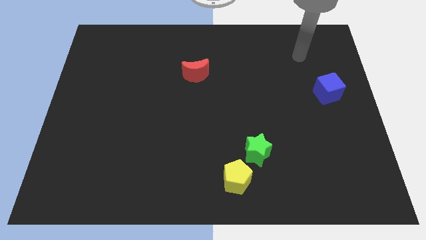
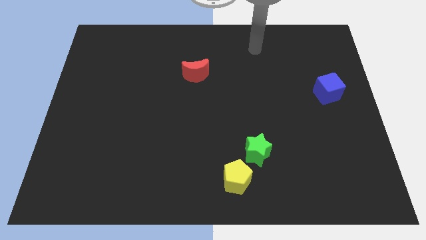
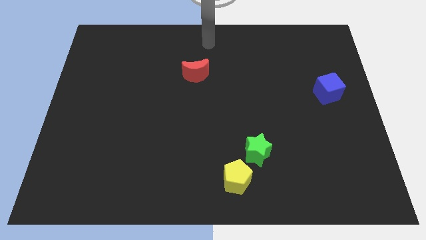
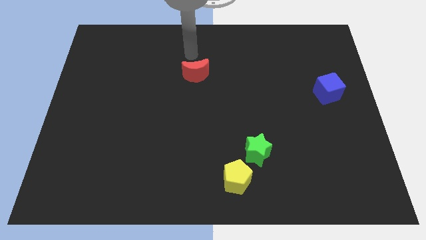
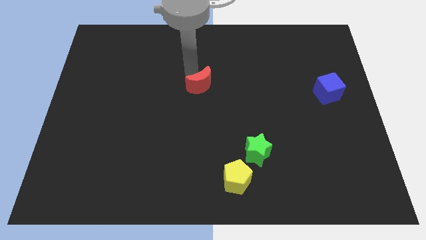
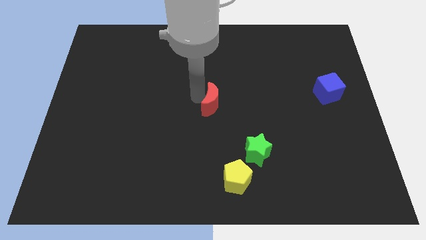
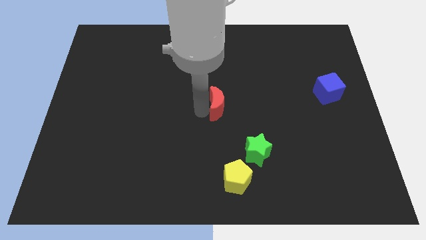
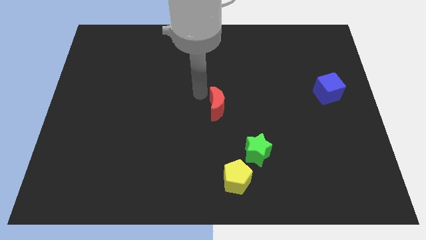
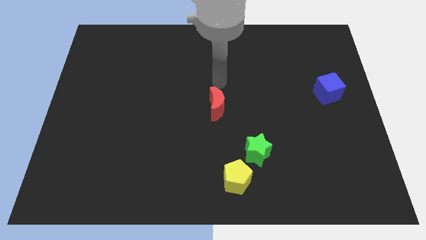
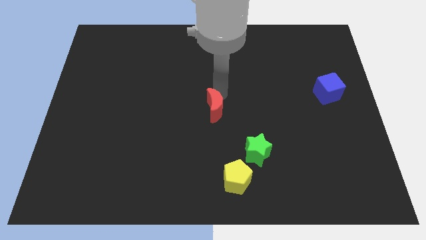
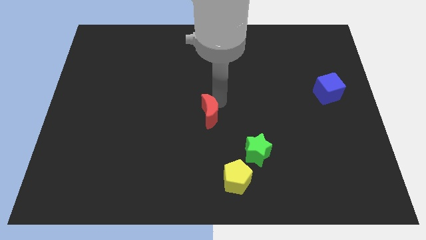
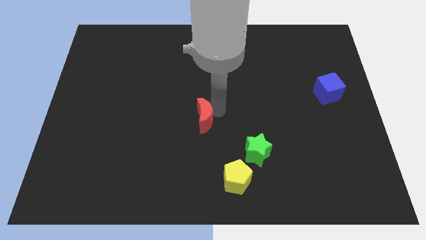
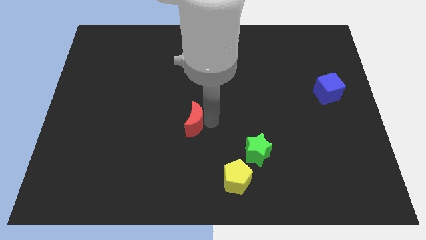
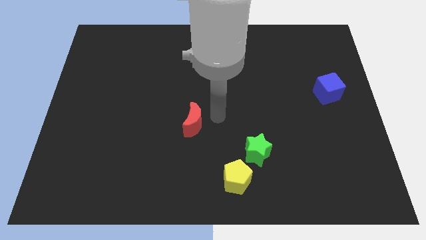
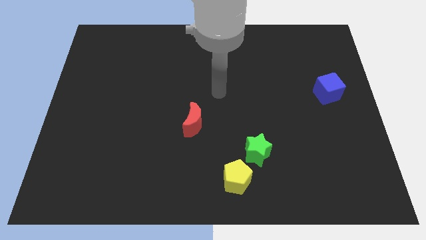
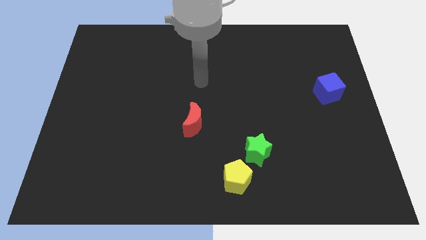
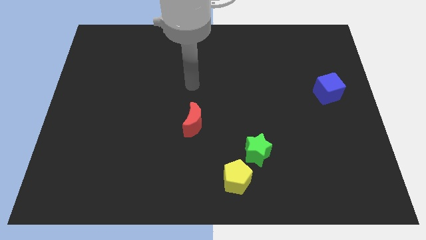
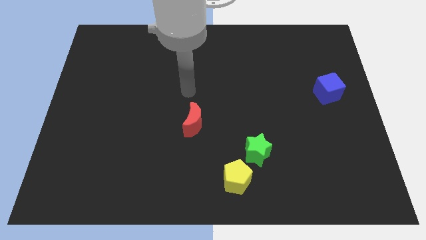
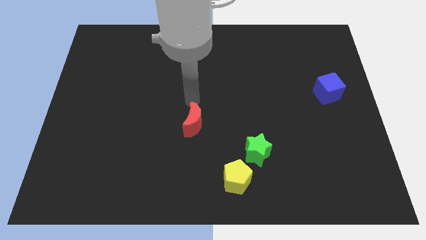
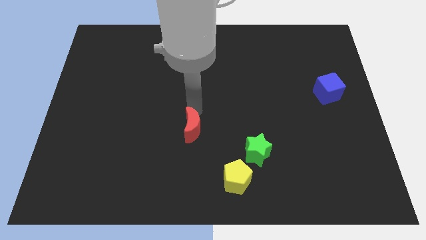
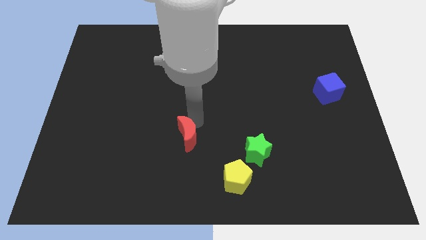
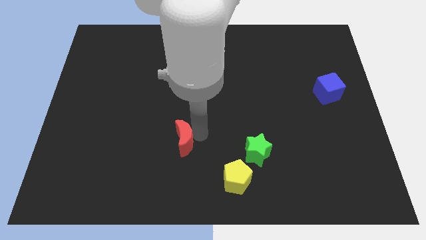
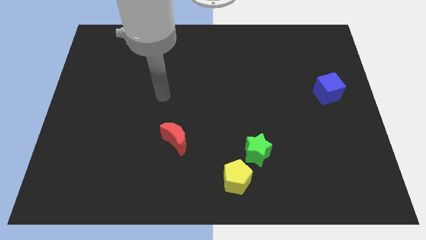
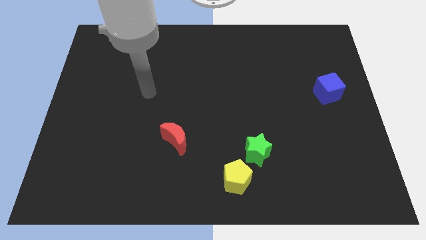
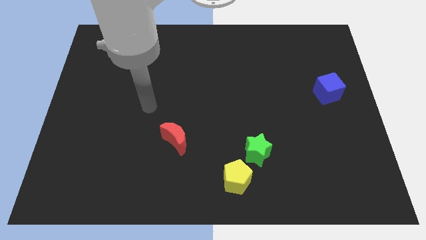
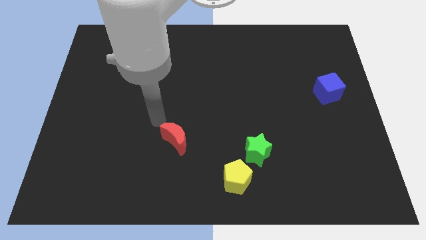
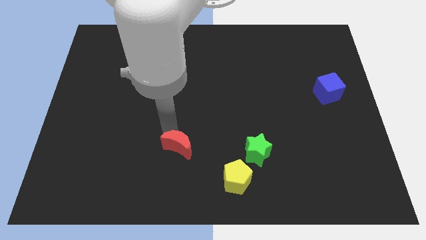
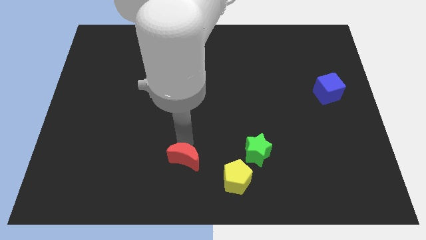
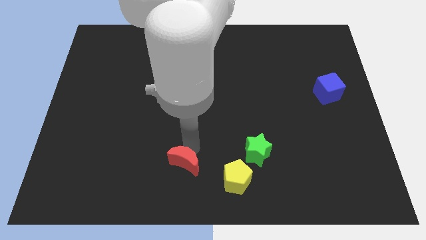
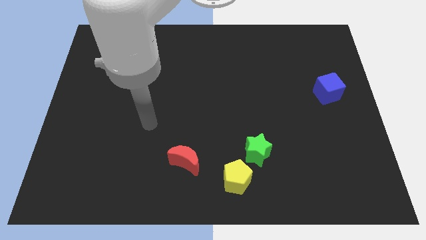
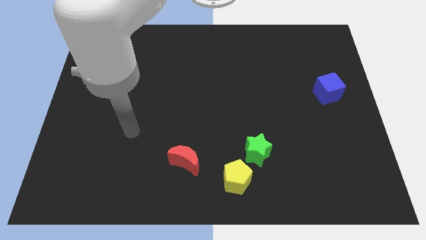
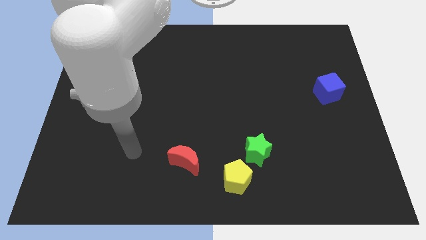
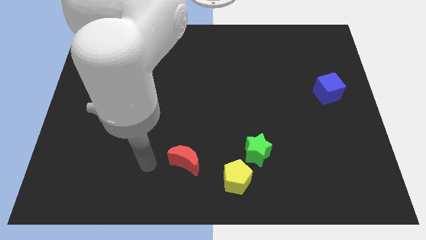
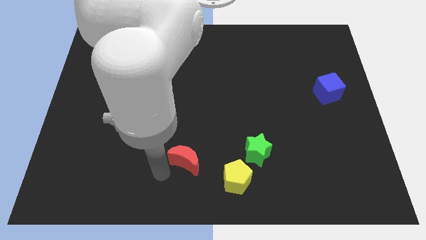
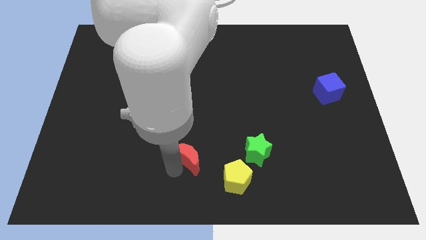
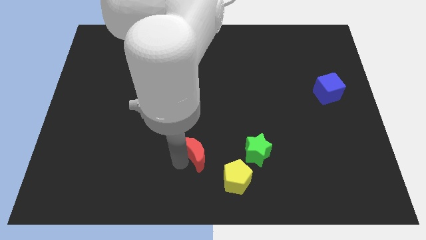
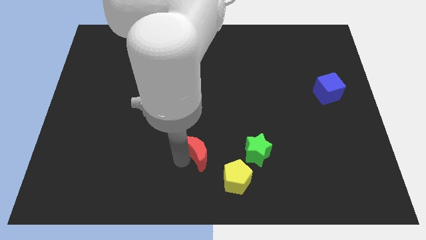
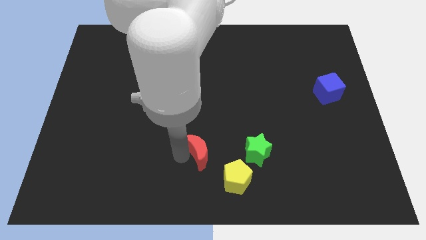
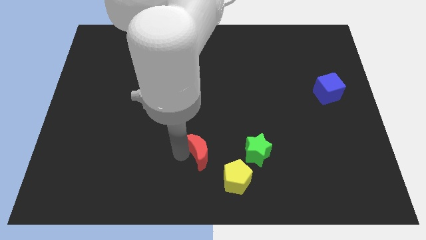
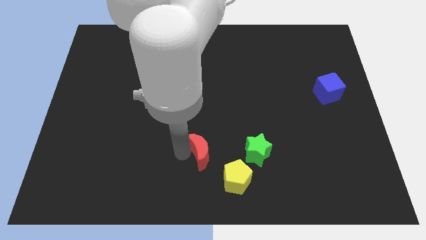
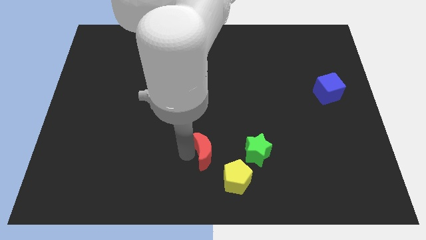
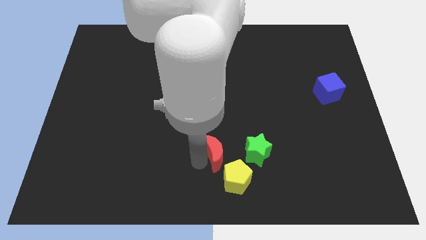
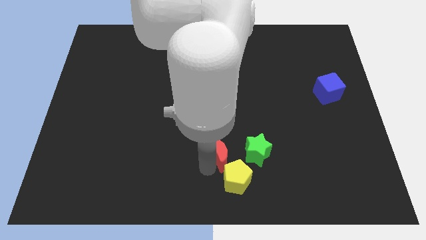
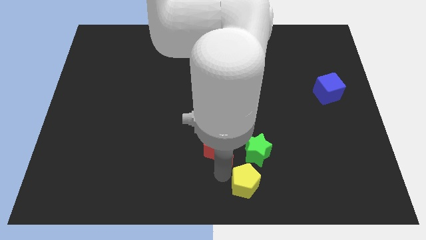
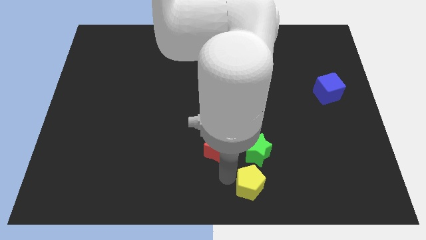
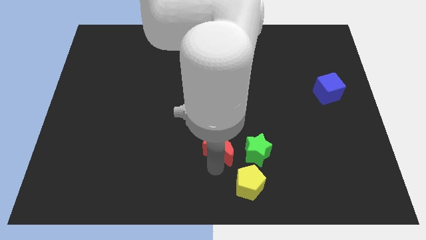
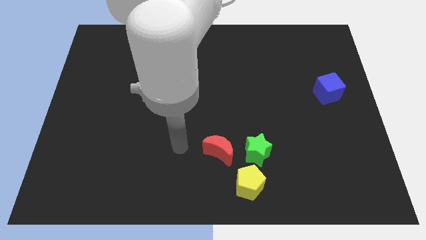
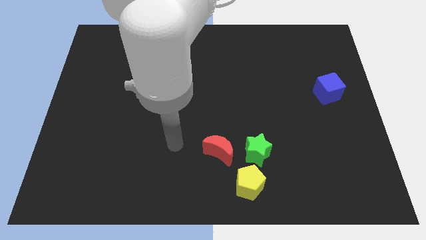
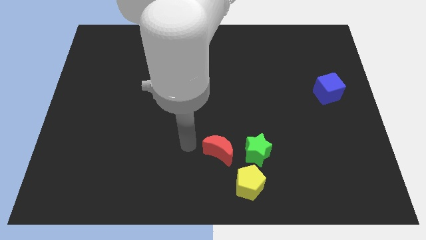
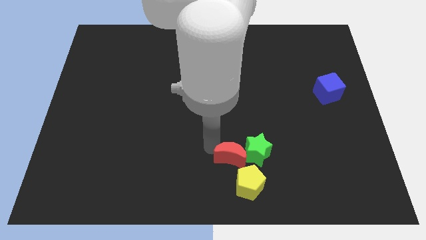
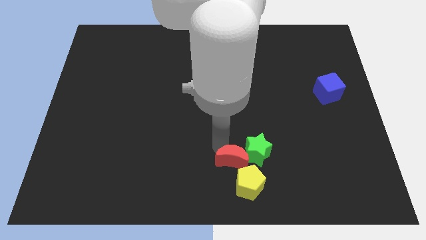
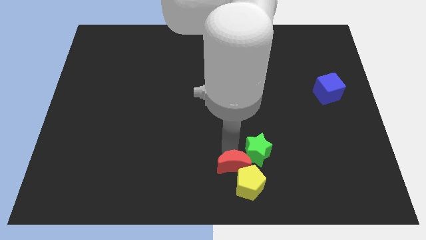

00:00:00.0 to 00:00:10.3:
put the moon next to the yellow block

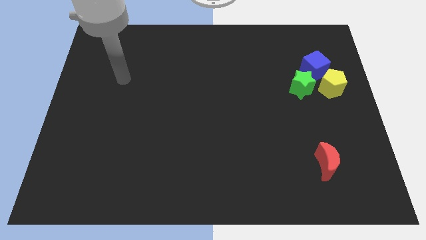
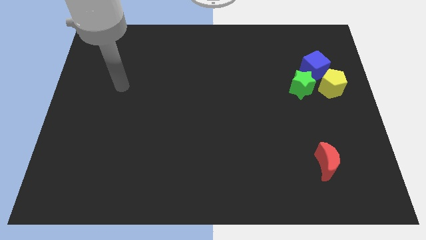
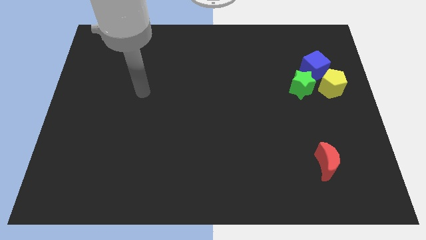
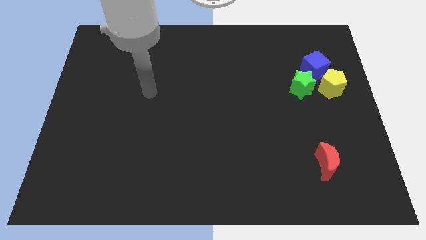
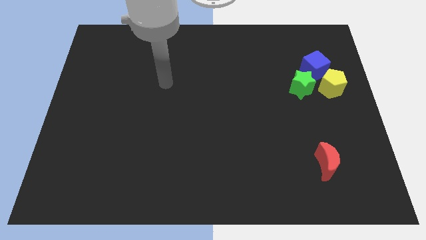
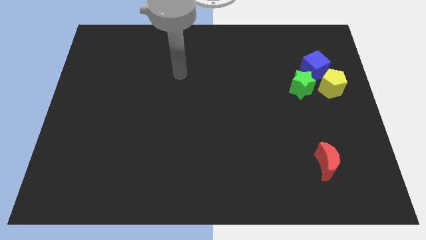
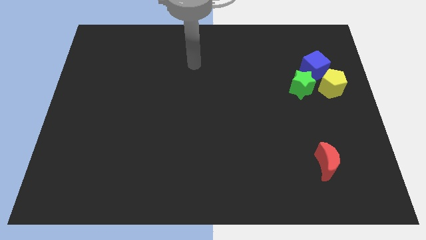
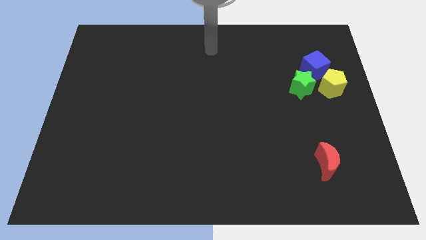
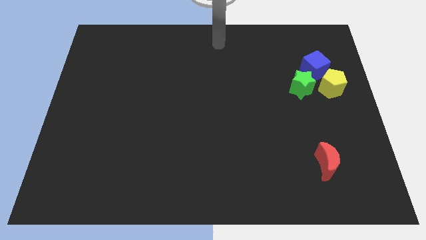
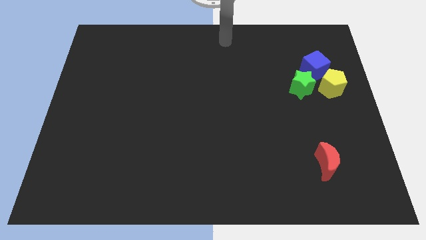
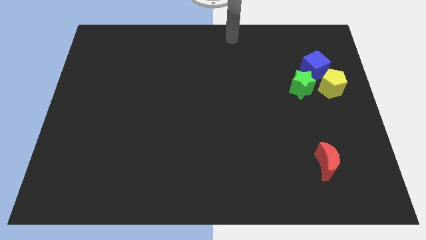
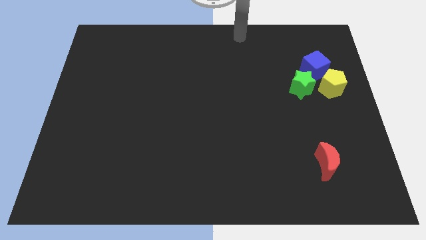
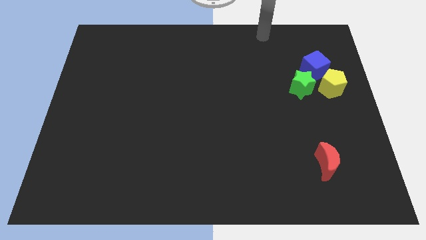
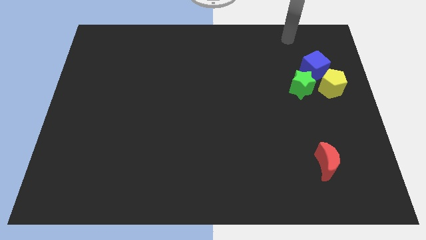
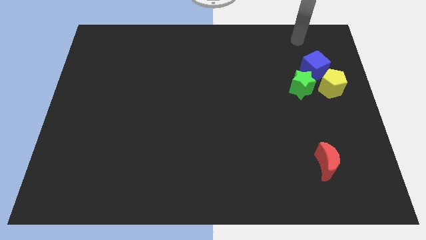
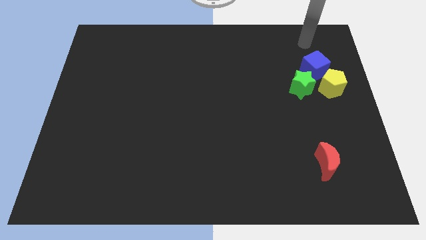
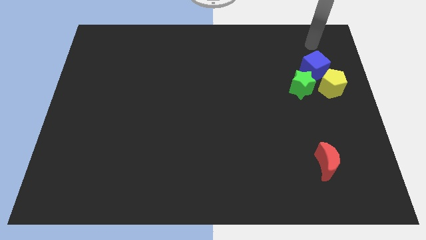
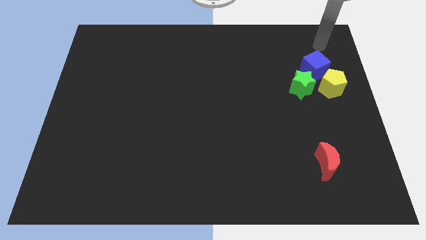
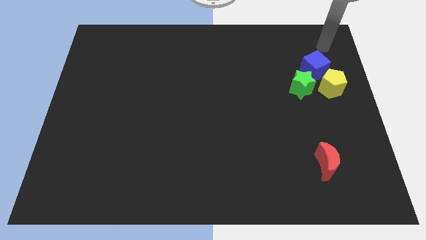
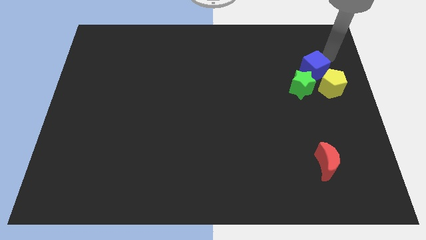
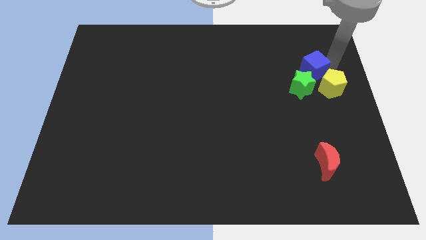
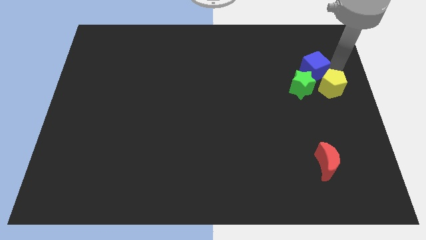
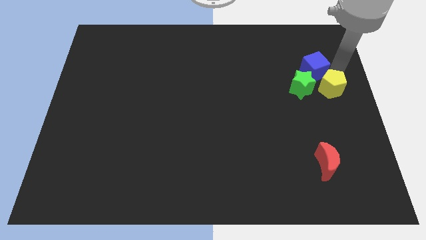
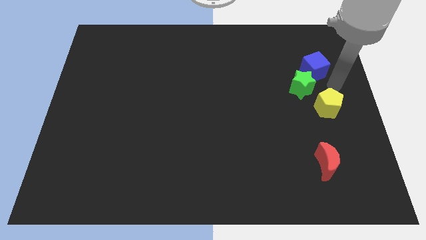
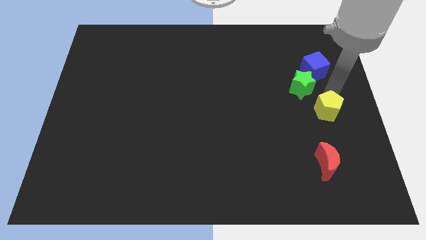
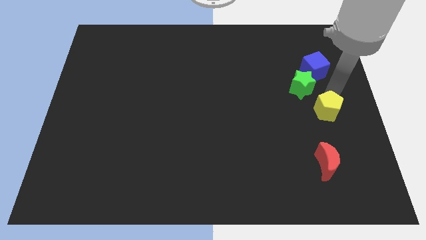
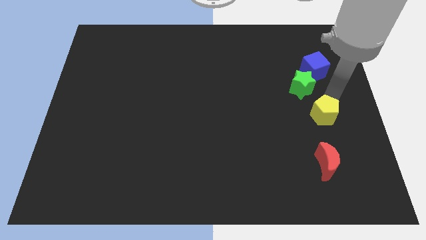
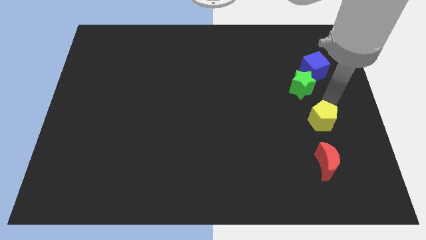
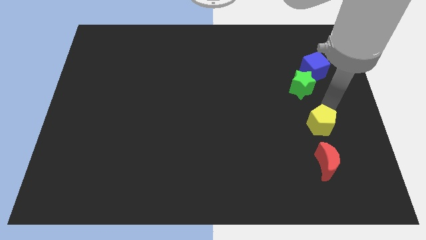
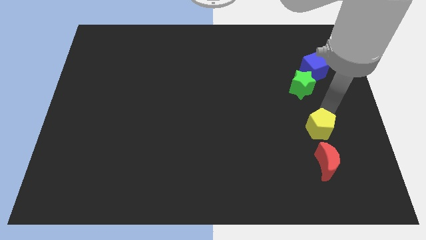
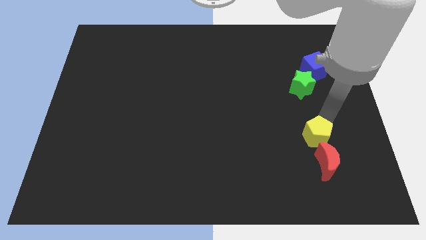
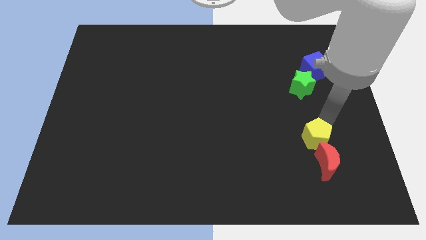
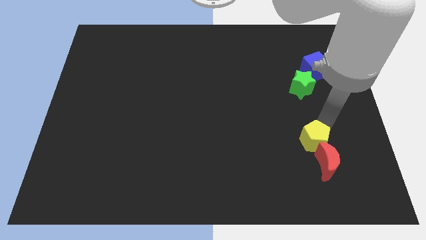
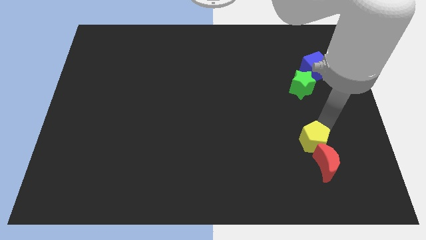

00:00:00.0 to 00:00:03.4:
slide the yellow block next to the moon

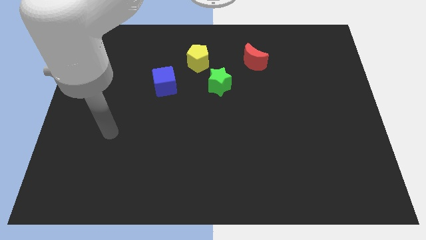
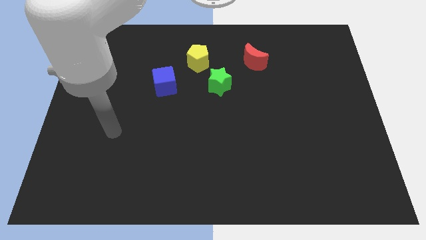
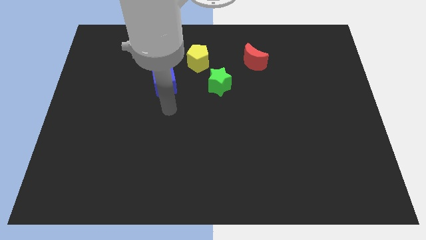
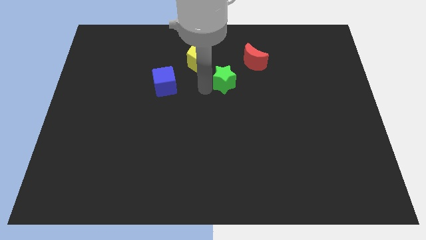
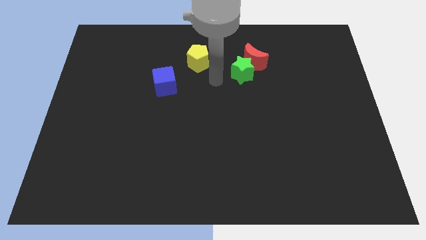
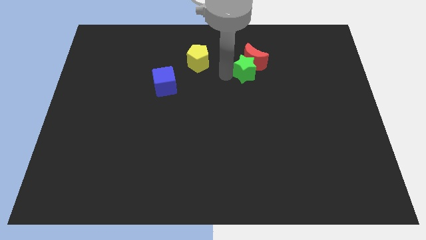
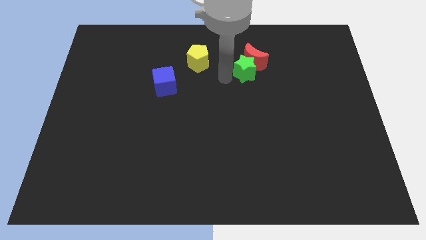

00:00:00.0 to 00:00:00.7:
move the star close to the moon
